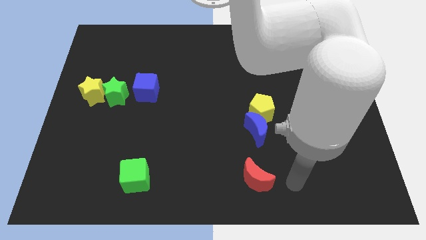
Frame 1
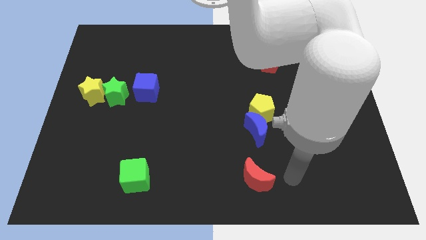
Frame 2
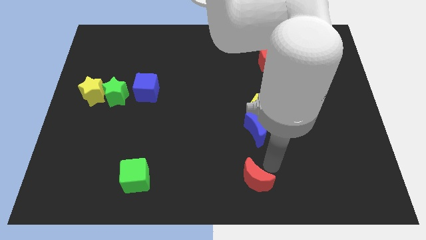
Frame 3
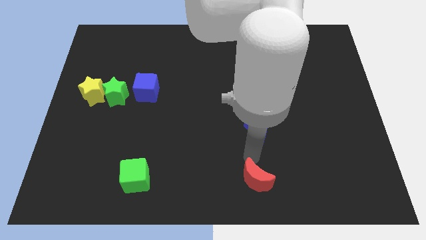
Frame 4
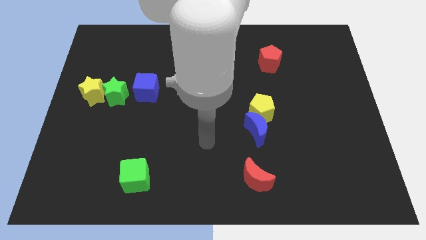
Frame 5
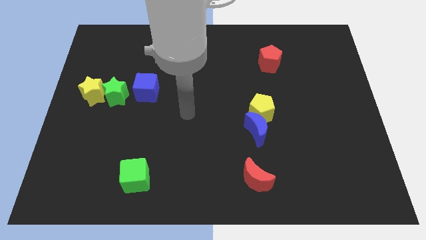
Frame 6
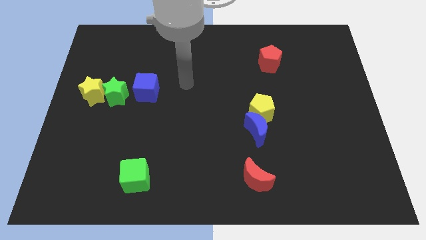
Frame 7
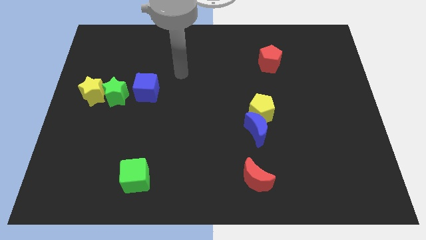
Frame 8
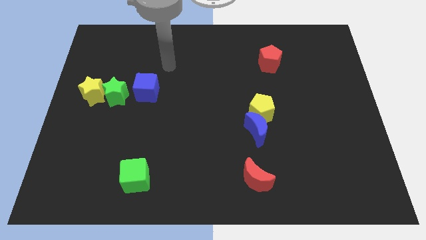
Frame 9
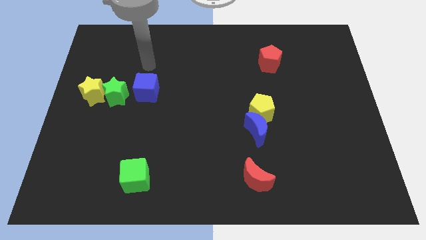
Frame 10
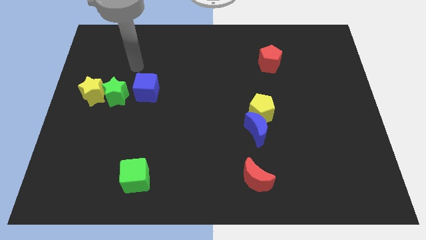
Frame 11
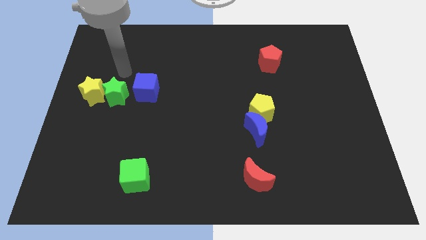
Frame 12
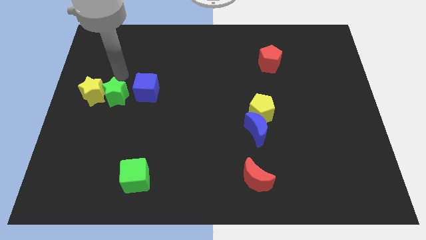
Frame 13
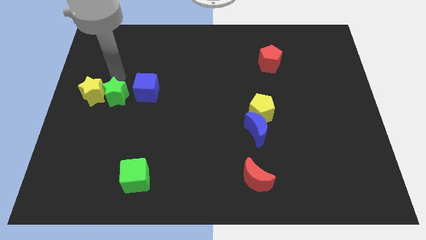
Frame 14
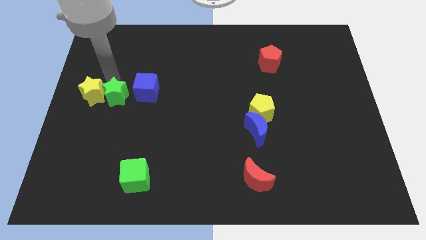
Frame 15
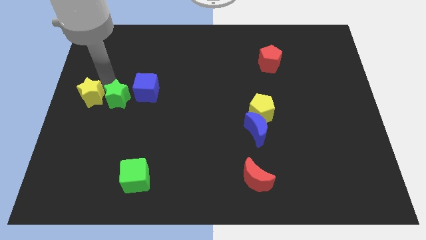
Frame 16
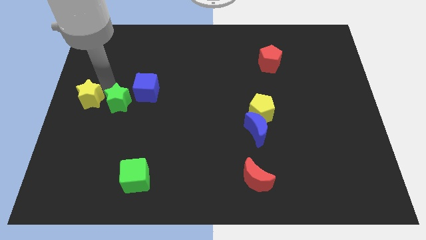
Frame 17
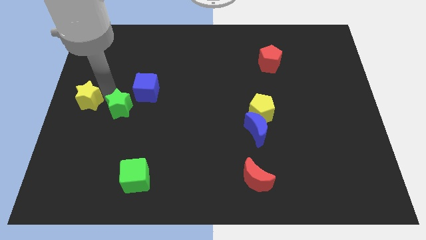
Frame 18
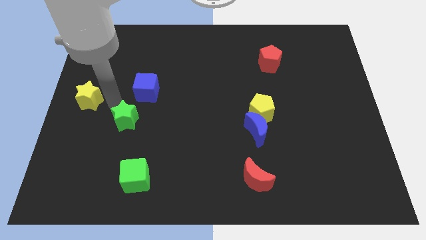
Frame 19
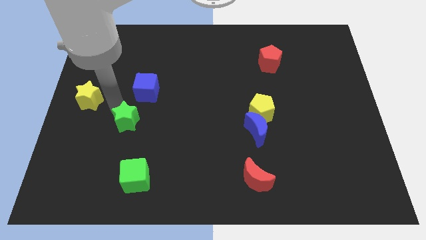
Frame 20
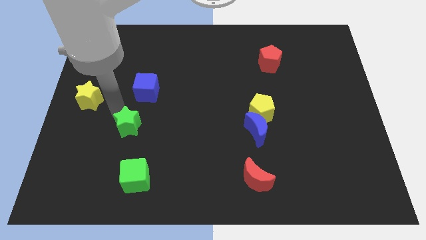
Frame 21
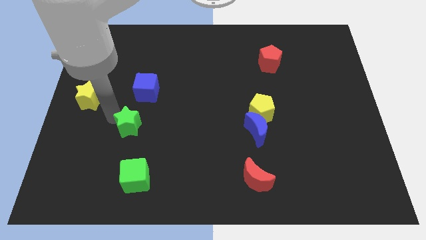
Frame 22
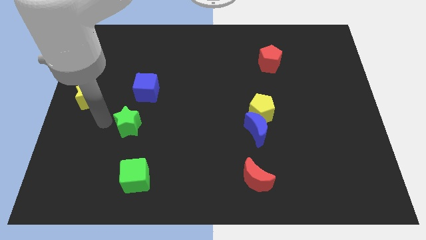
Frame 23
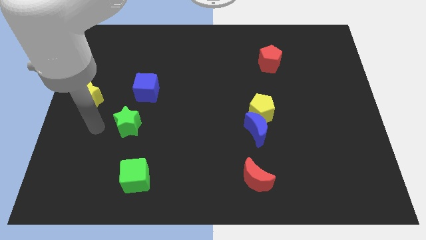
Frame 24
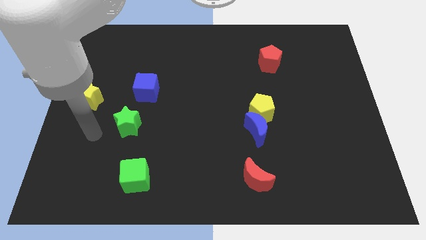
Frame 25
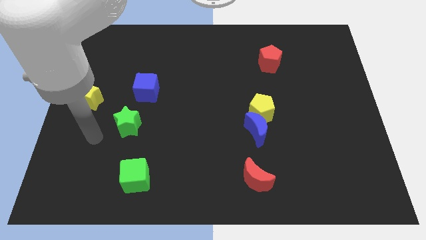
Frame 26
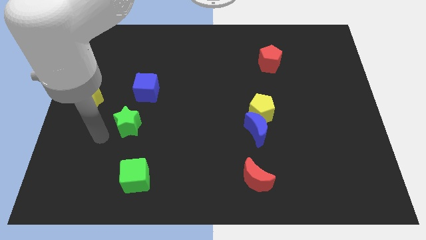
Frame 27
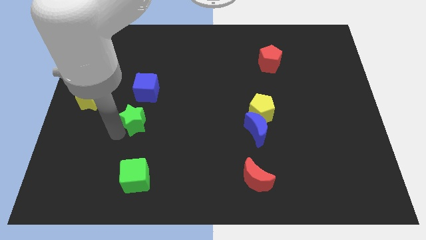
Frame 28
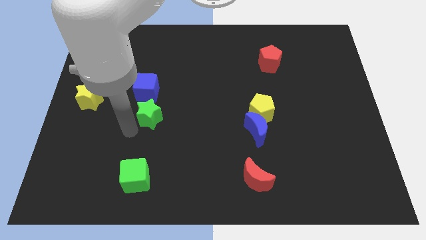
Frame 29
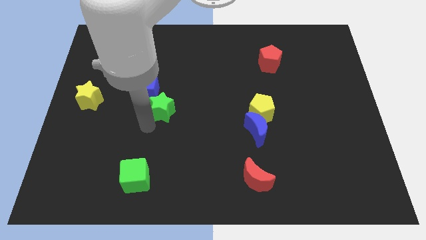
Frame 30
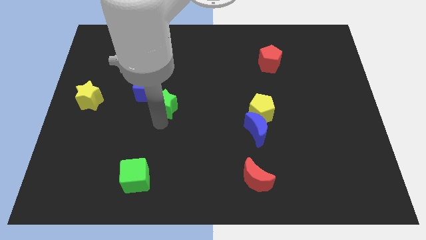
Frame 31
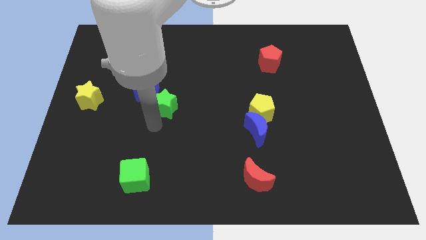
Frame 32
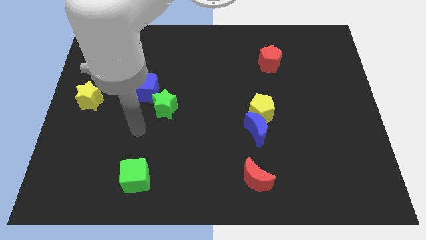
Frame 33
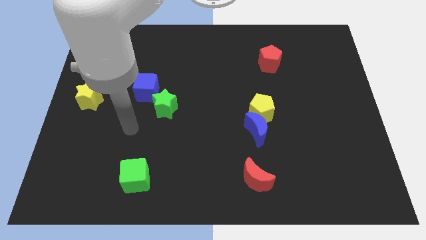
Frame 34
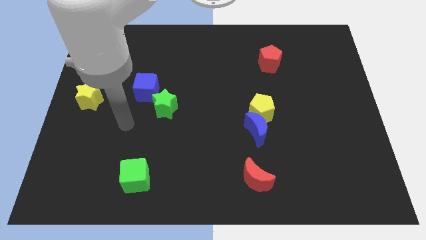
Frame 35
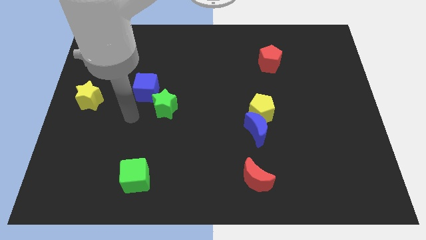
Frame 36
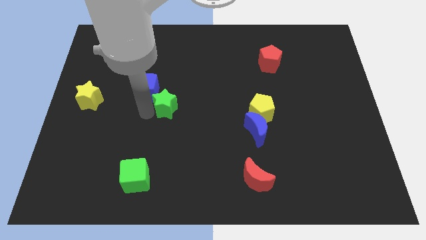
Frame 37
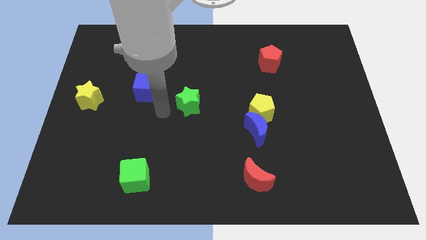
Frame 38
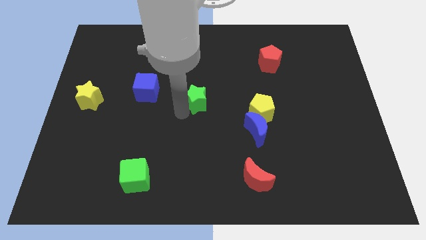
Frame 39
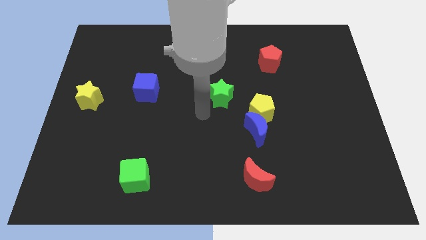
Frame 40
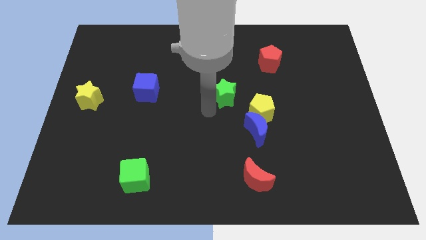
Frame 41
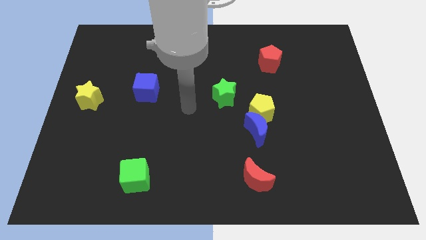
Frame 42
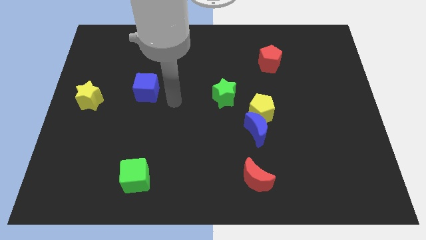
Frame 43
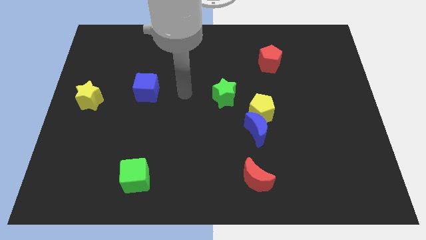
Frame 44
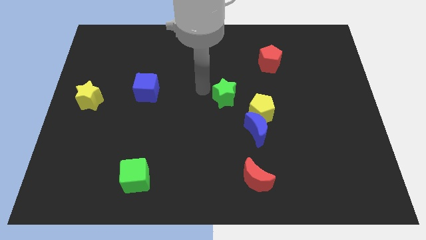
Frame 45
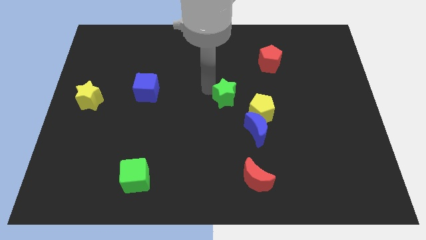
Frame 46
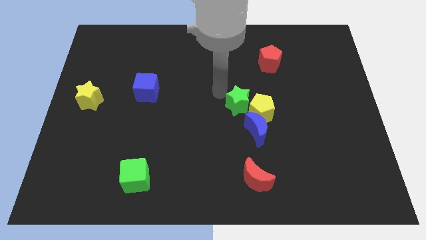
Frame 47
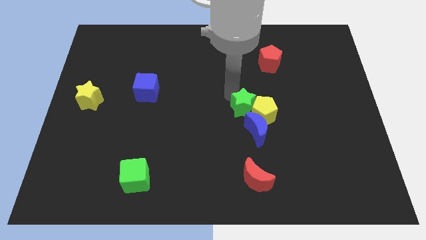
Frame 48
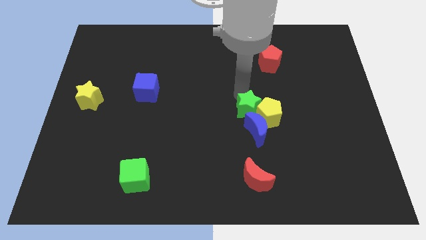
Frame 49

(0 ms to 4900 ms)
push the green star close to the yellow pentagon

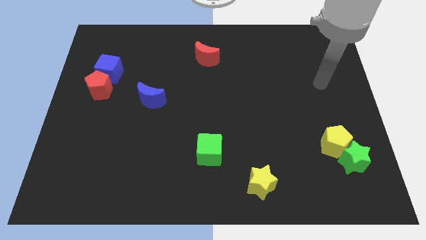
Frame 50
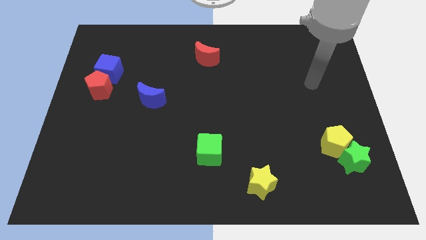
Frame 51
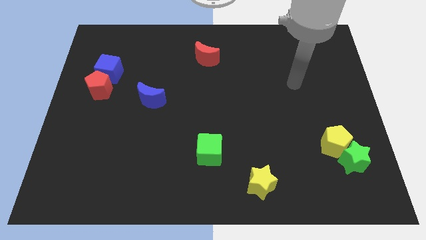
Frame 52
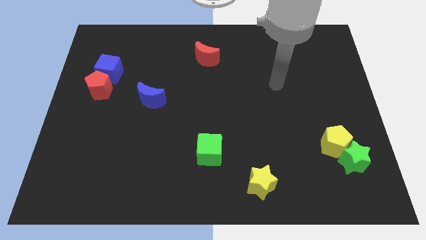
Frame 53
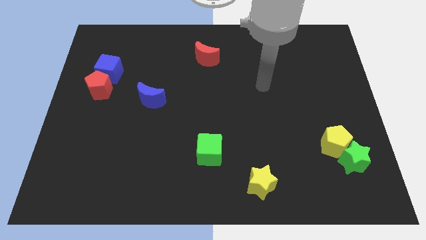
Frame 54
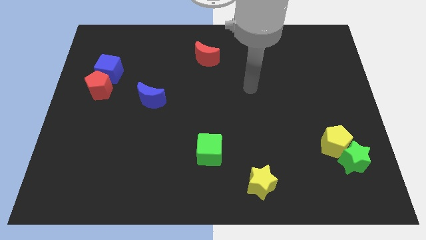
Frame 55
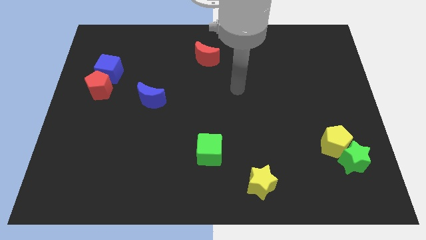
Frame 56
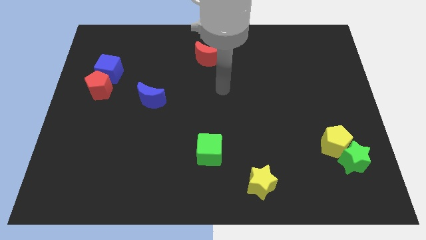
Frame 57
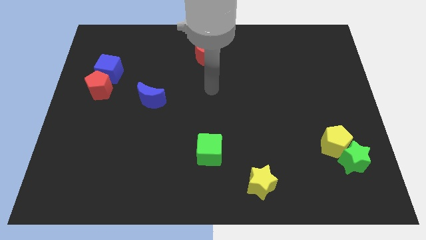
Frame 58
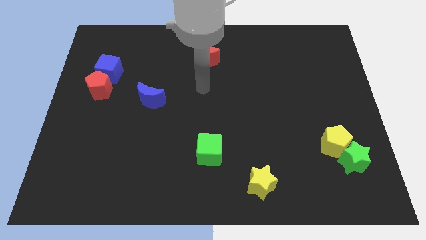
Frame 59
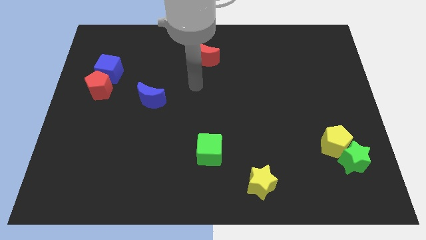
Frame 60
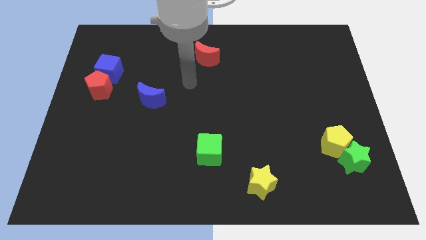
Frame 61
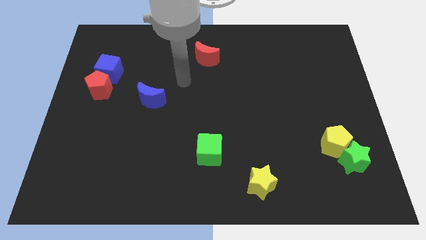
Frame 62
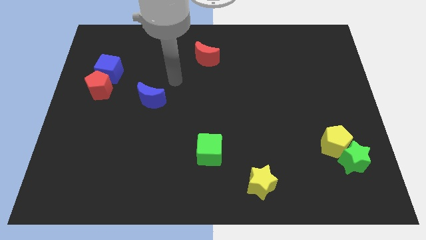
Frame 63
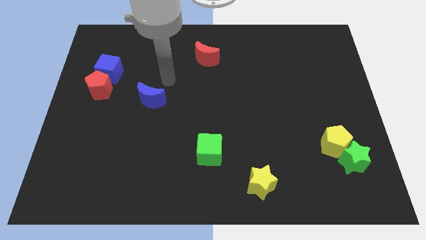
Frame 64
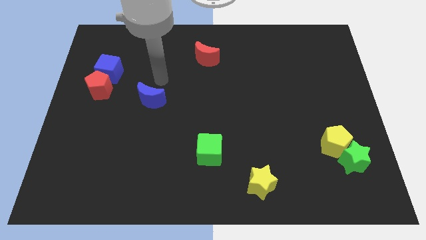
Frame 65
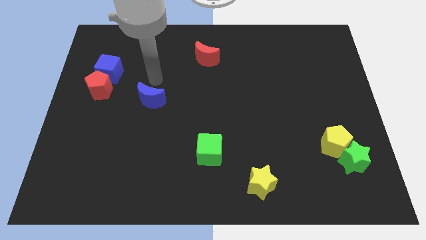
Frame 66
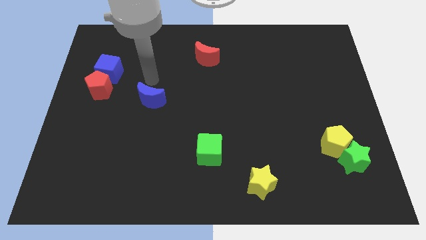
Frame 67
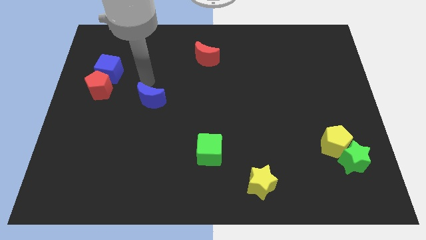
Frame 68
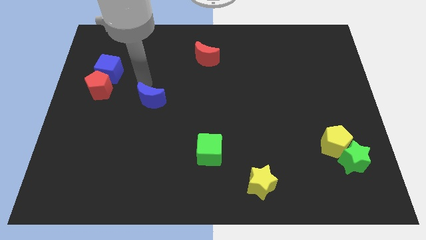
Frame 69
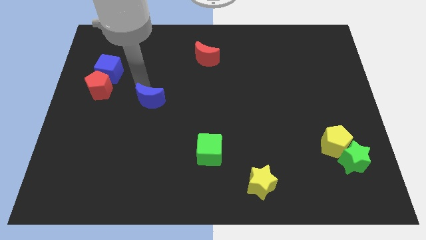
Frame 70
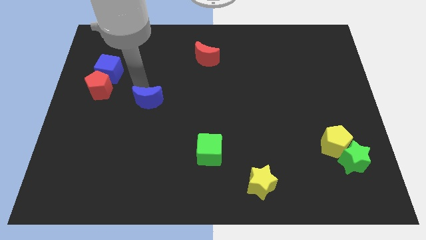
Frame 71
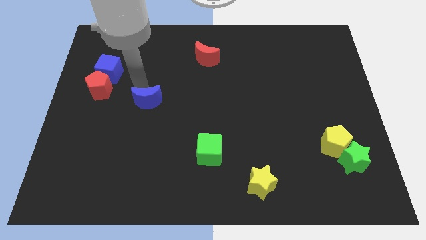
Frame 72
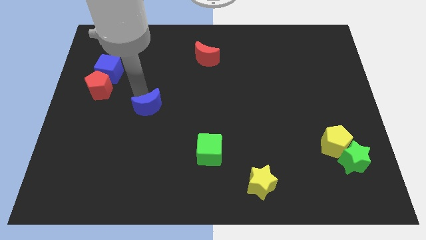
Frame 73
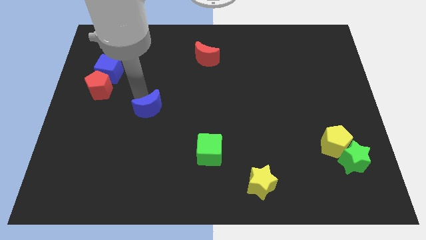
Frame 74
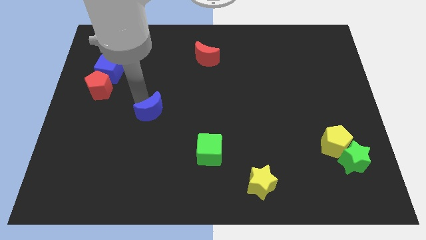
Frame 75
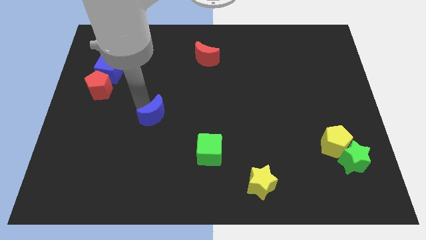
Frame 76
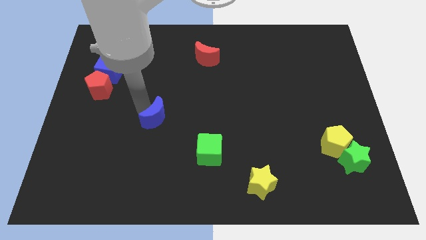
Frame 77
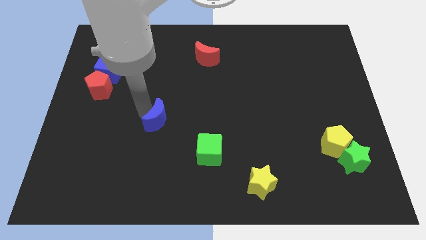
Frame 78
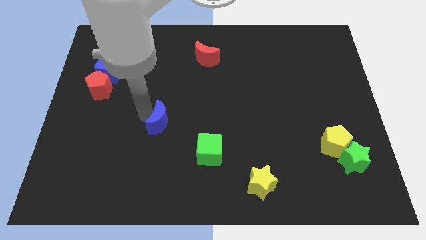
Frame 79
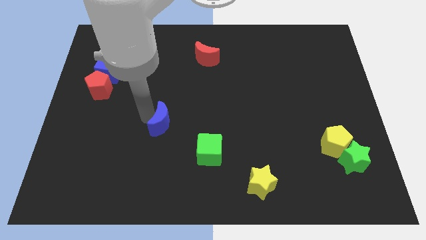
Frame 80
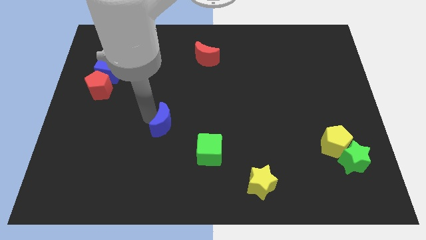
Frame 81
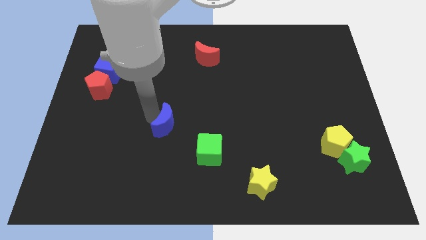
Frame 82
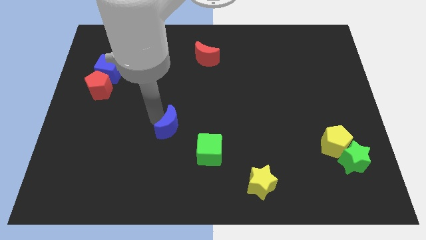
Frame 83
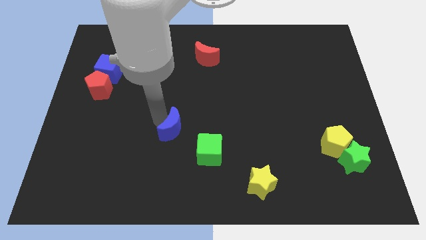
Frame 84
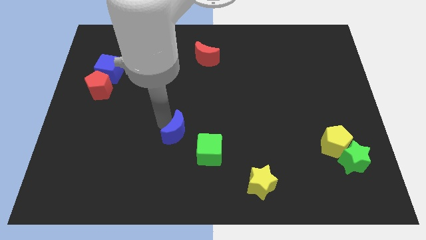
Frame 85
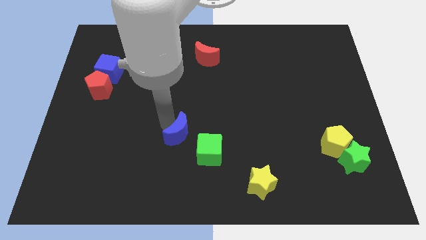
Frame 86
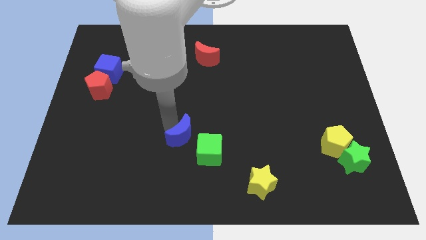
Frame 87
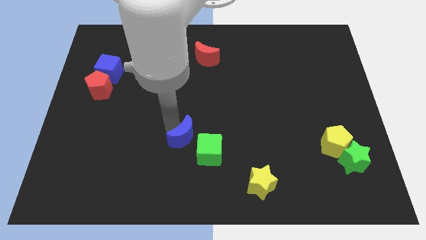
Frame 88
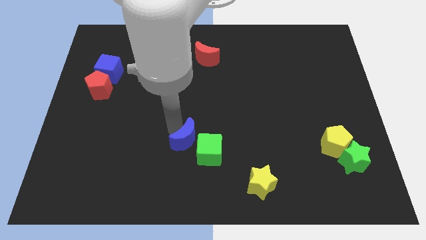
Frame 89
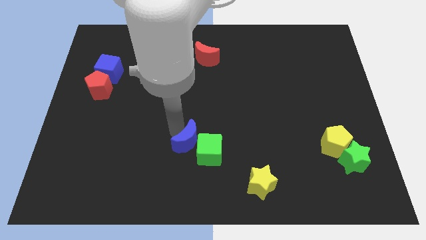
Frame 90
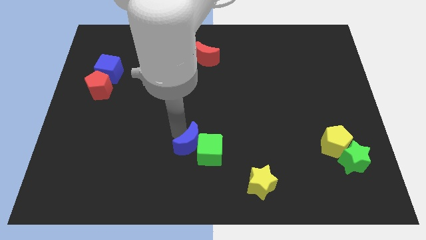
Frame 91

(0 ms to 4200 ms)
move the blue moon towards the green cube
